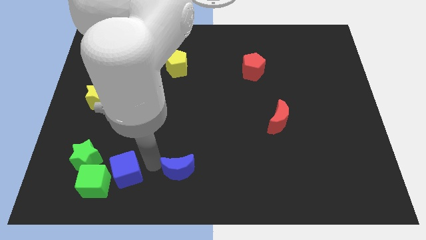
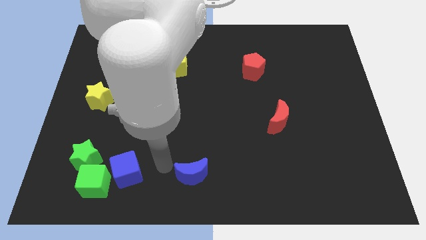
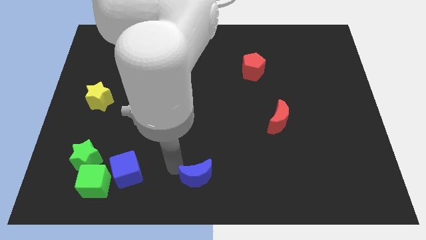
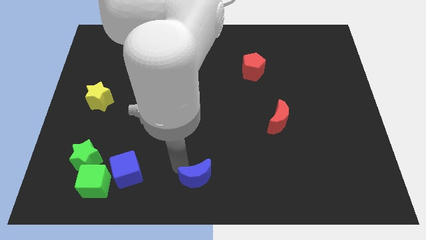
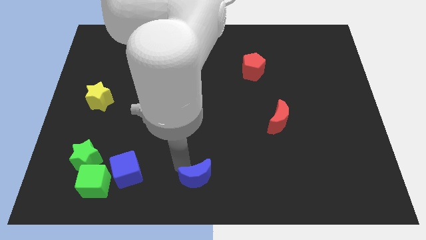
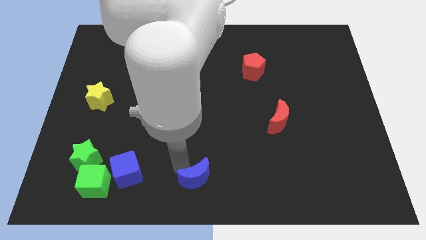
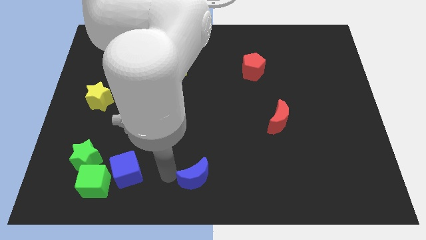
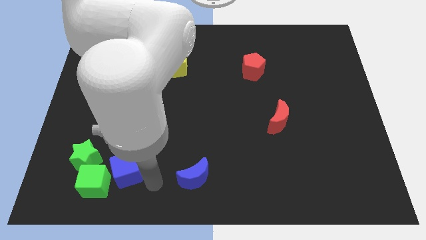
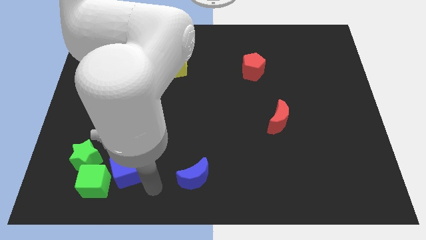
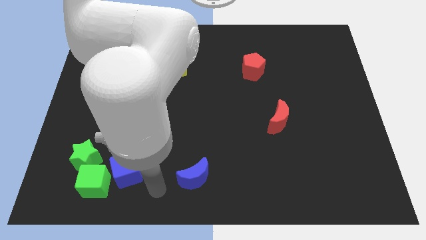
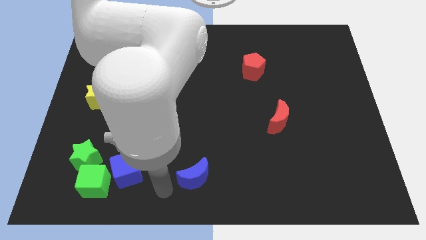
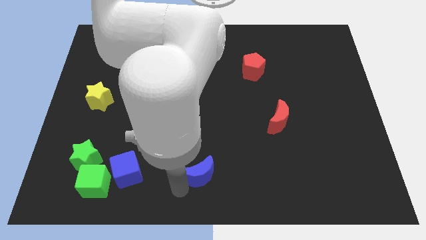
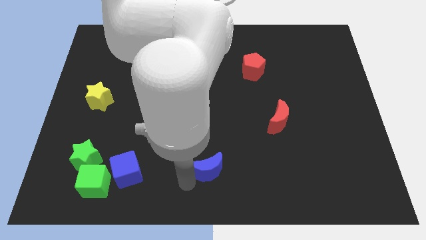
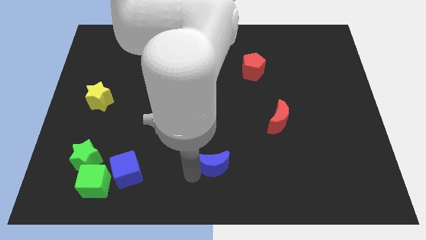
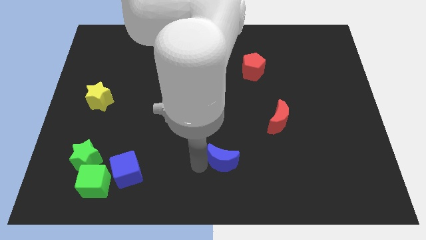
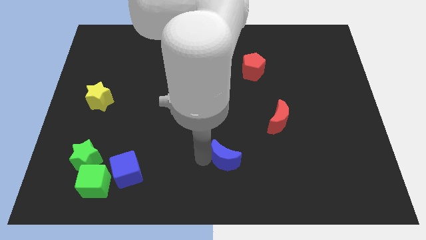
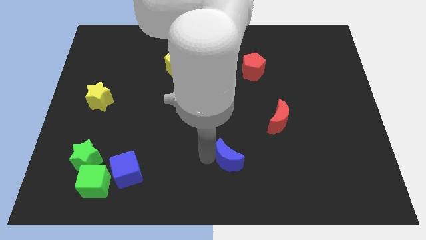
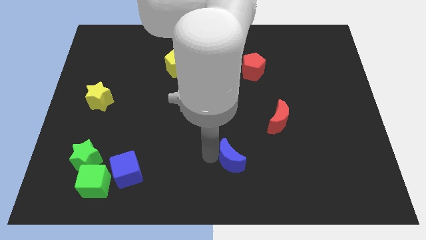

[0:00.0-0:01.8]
slide the blue moon diagonally bottom right to the yellow pentagon

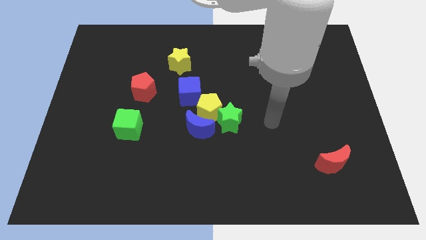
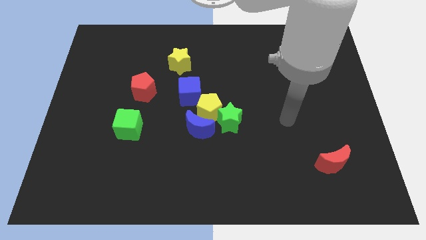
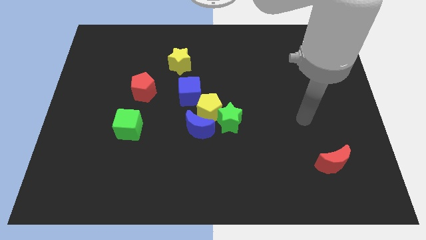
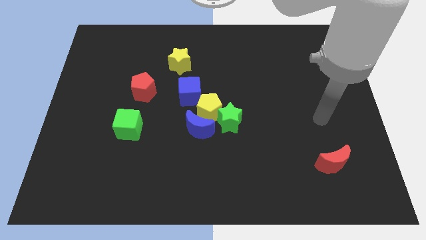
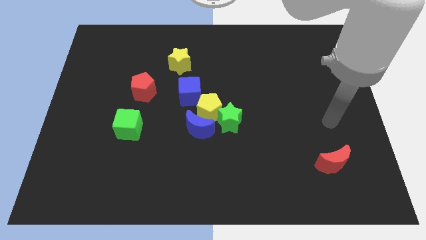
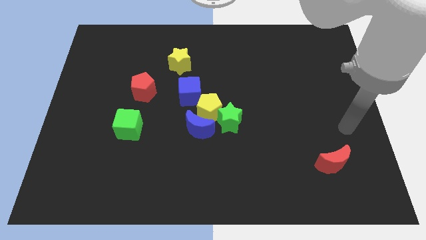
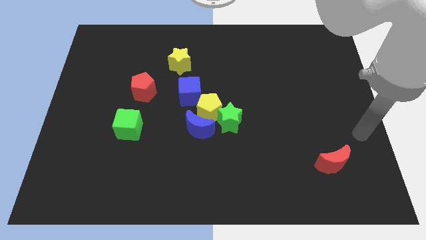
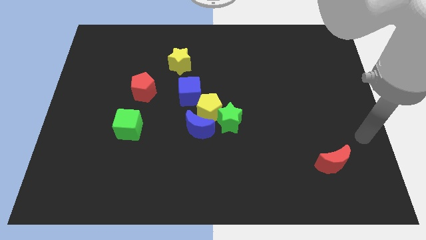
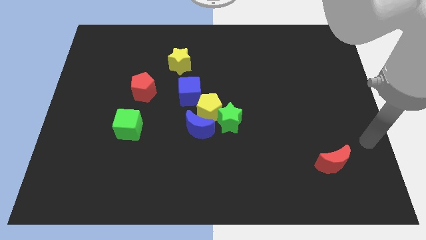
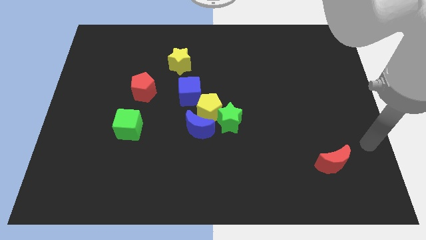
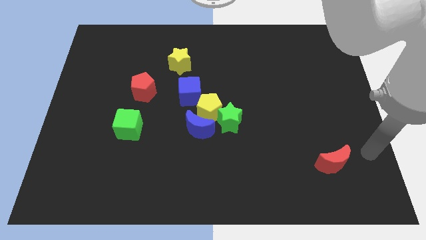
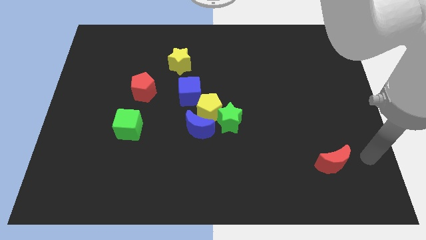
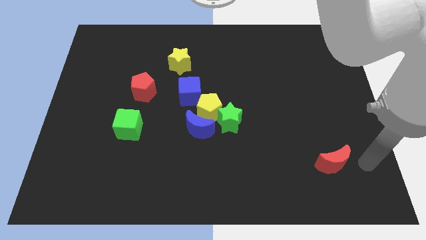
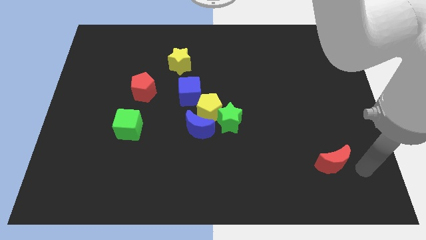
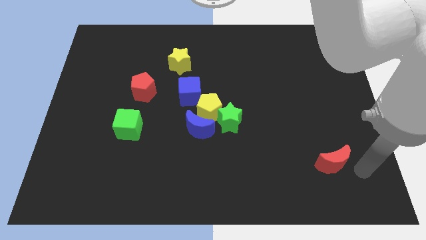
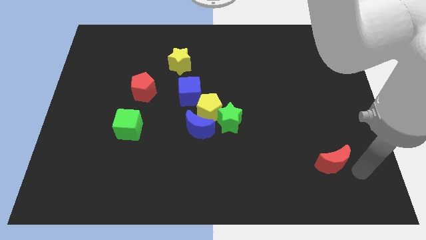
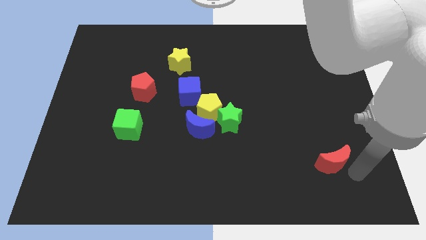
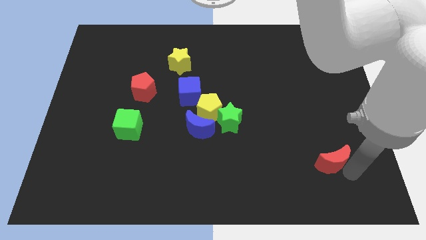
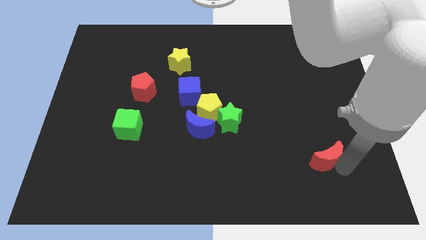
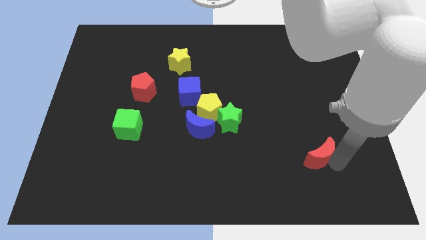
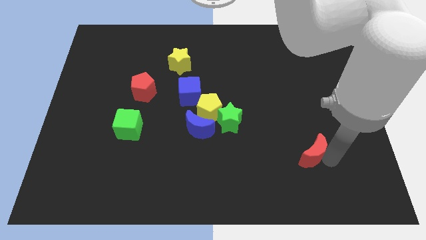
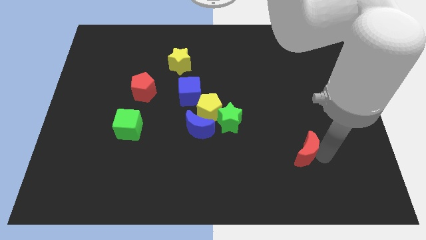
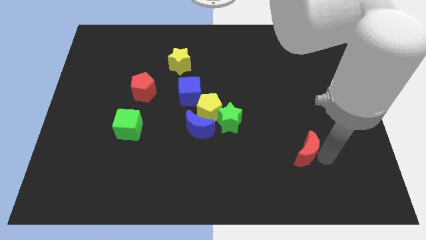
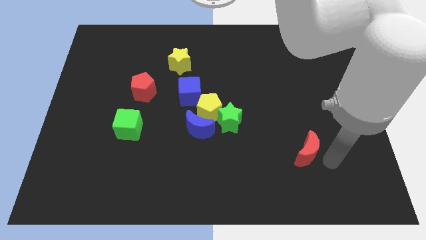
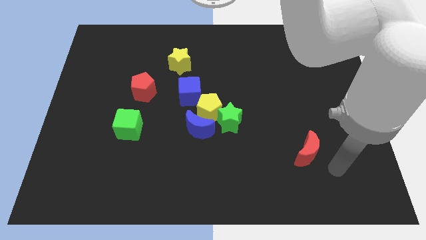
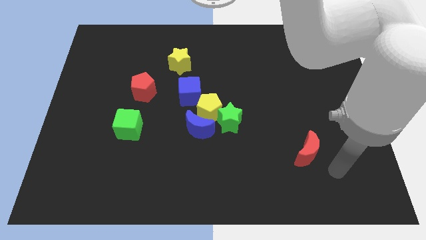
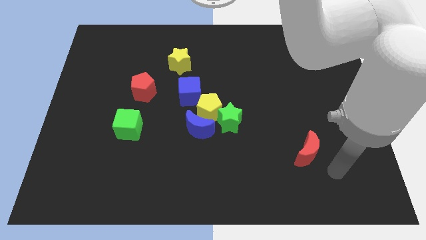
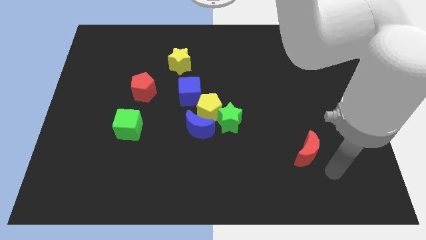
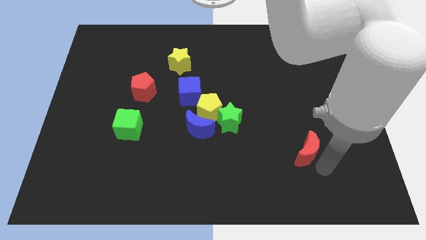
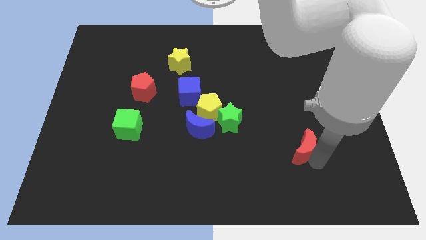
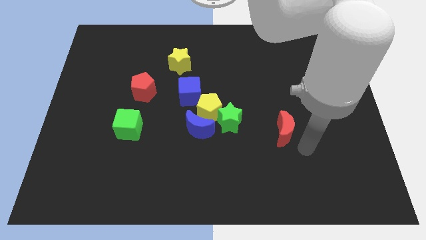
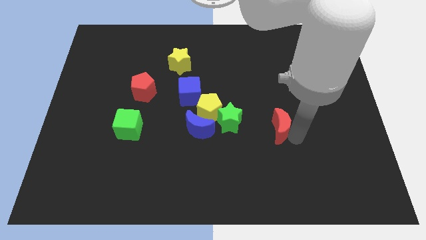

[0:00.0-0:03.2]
move the red crescent towards the greens star

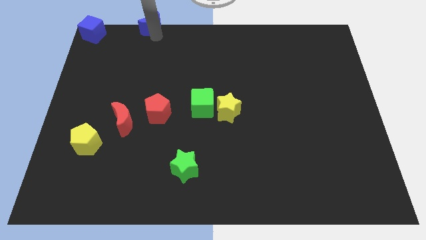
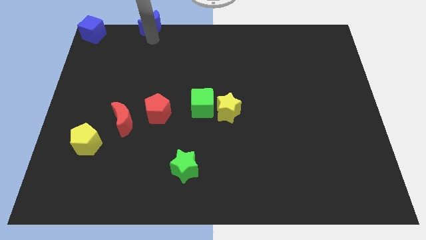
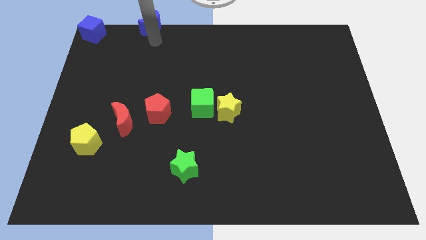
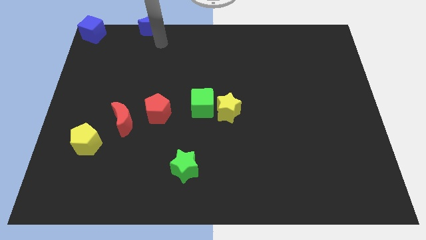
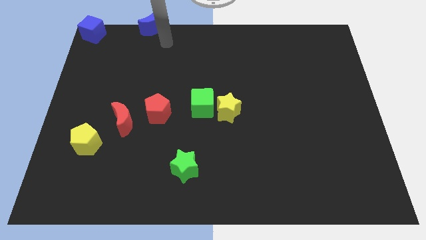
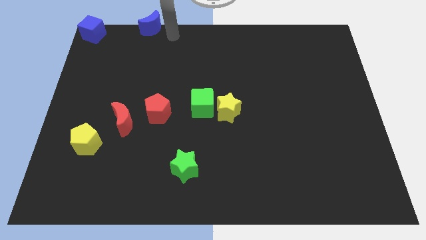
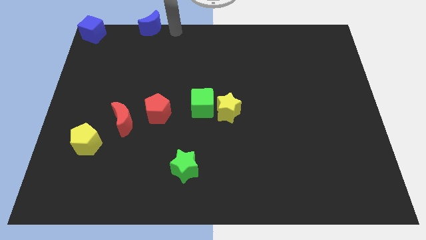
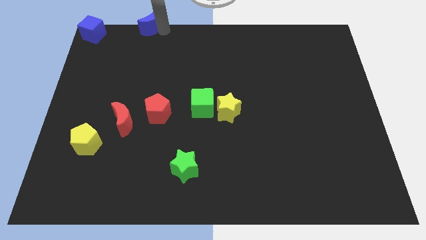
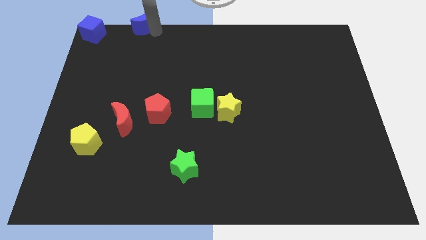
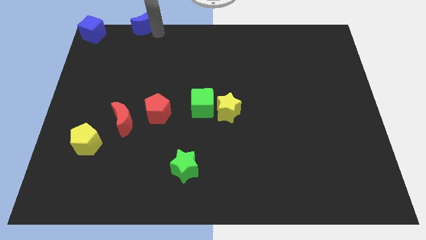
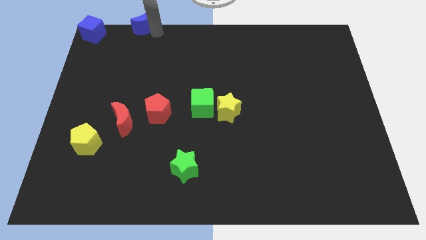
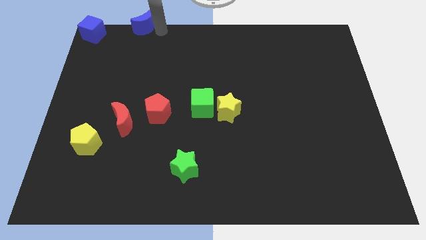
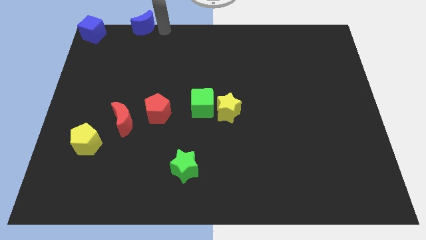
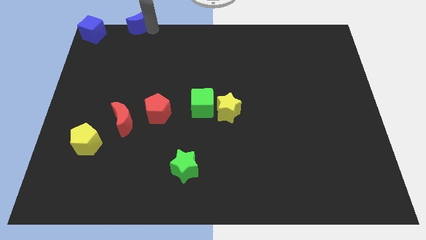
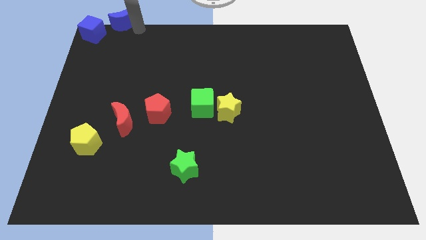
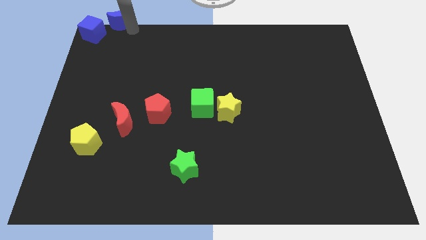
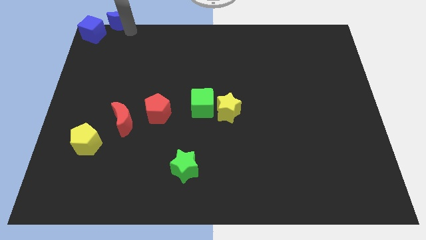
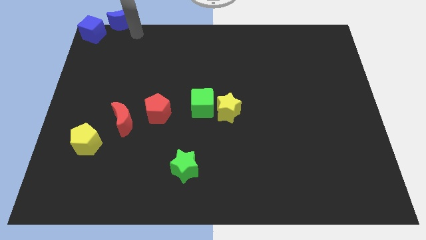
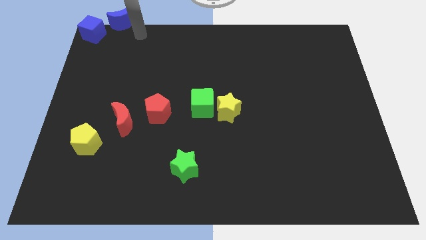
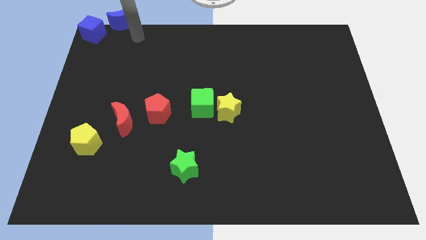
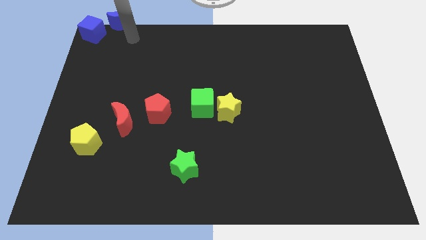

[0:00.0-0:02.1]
push the blue crescent to the right of the blue cube

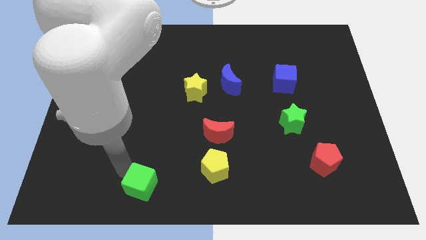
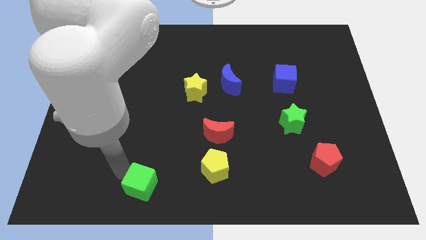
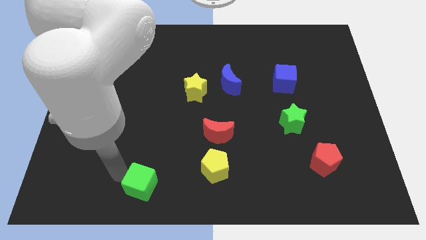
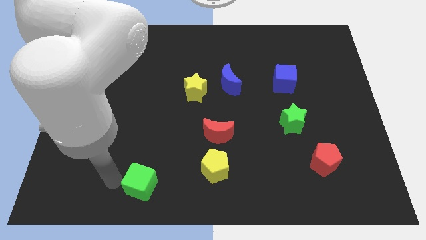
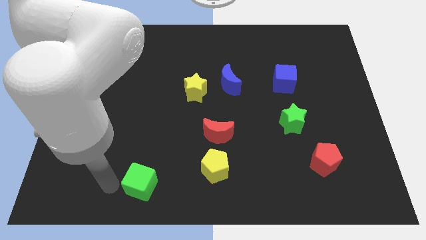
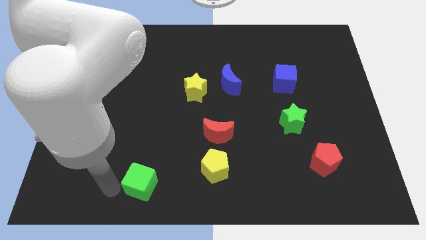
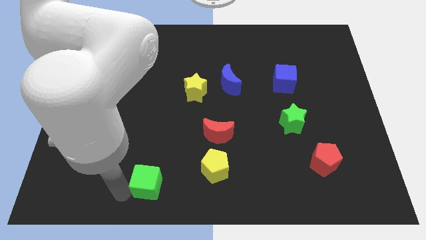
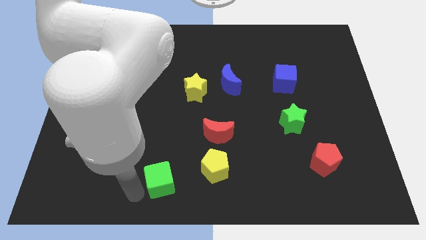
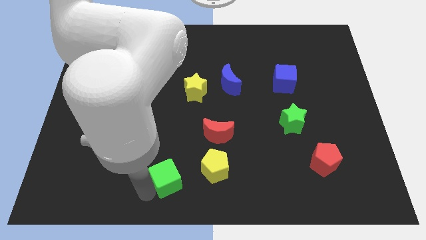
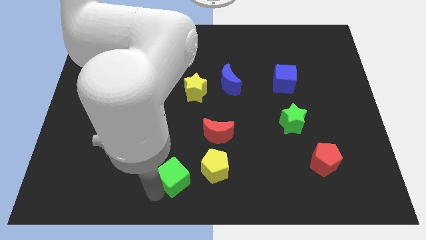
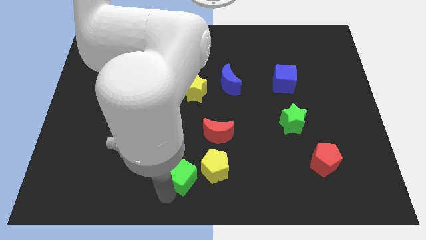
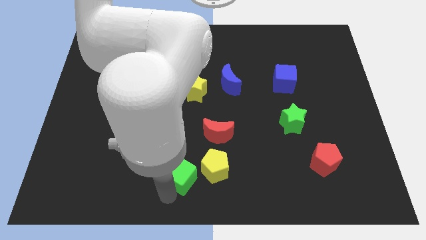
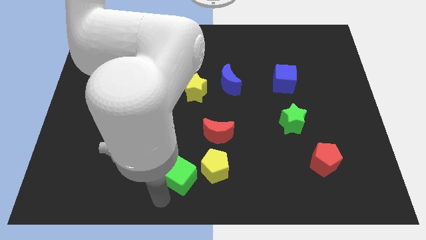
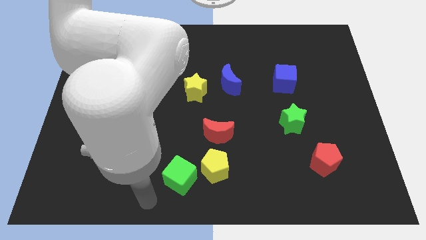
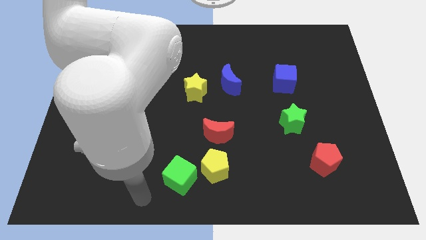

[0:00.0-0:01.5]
move the green cube to the left of the yellow pentagon

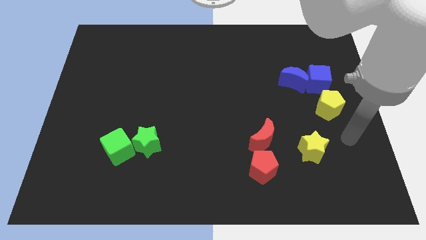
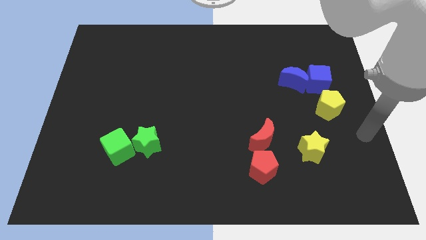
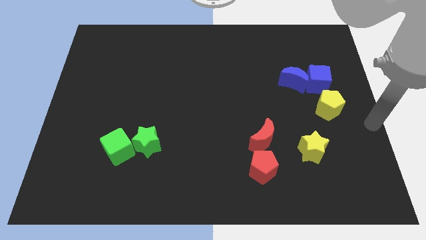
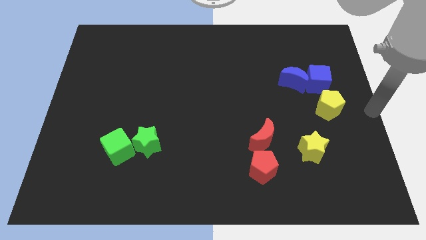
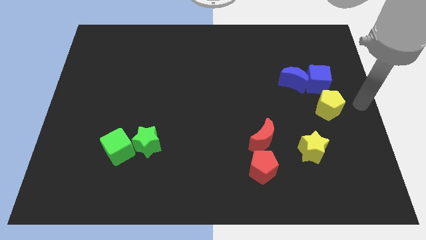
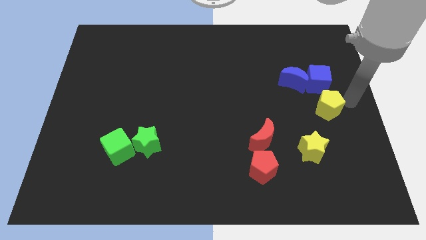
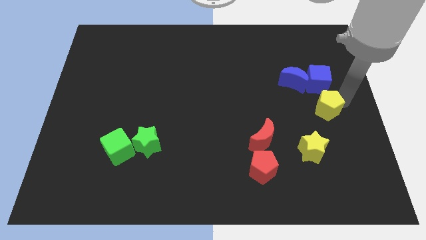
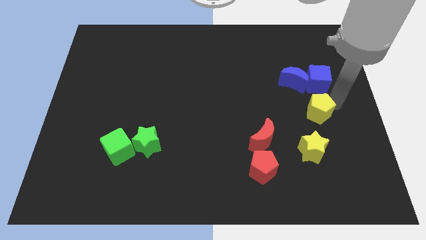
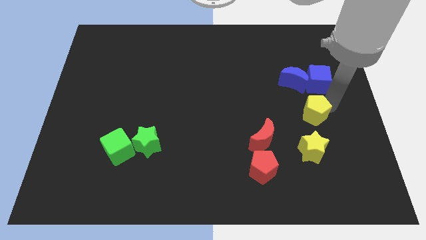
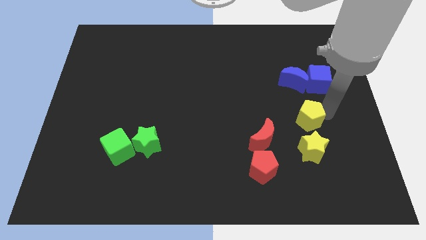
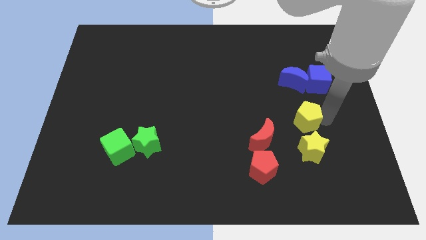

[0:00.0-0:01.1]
place the yellow pentagon above the yellow star
